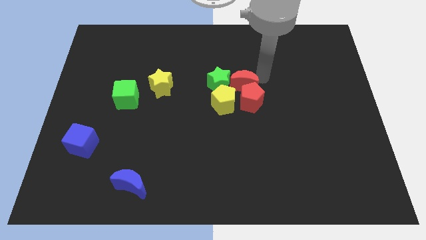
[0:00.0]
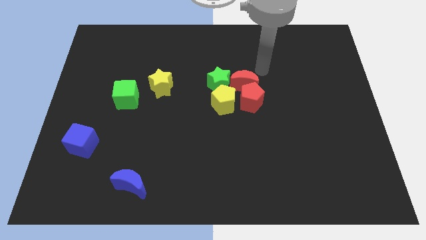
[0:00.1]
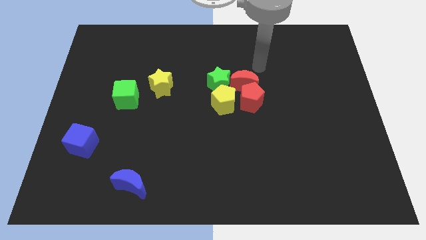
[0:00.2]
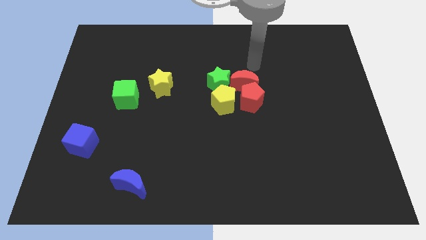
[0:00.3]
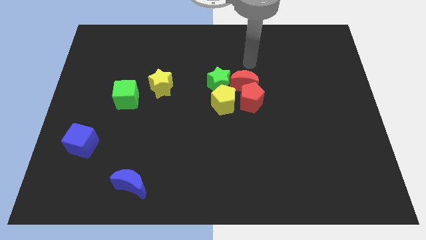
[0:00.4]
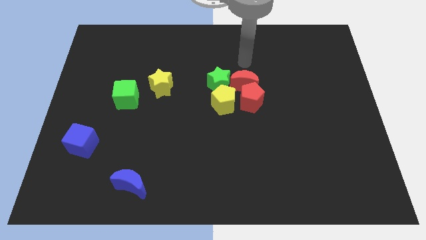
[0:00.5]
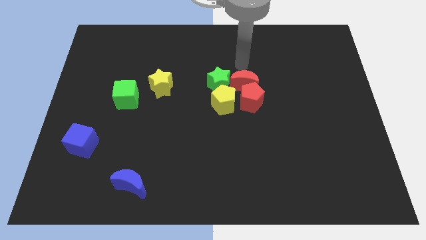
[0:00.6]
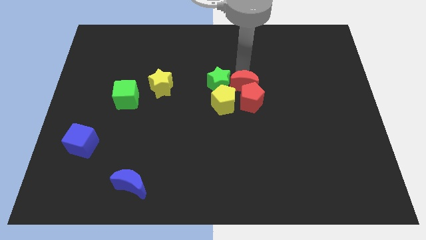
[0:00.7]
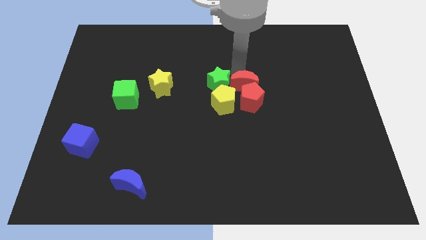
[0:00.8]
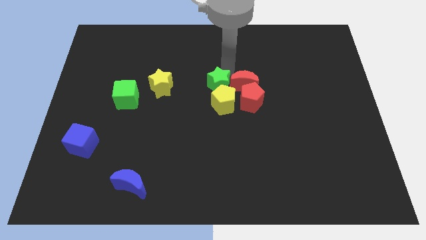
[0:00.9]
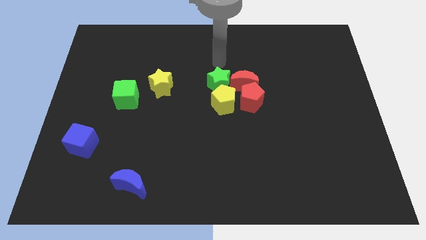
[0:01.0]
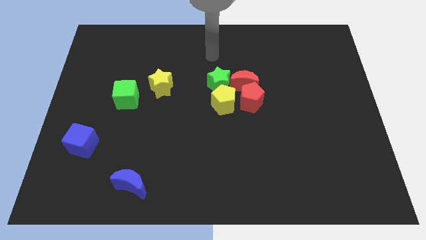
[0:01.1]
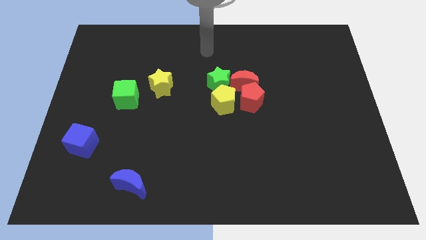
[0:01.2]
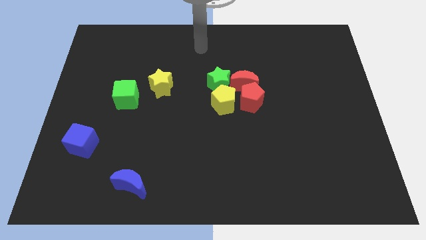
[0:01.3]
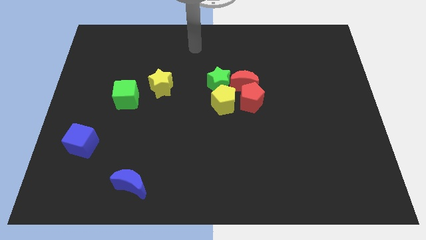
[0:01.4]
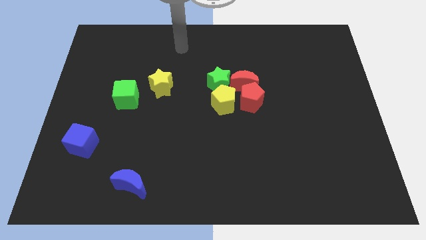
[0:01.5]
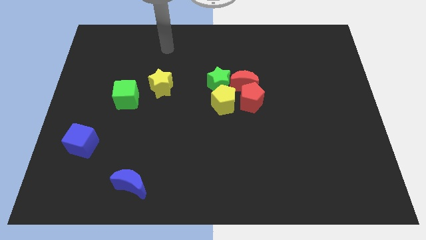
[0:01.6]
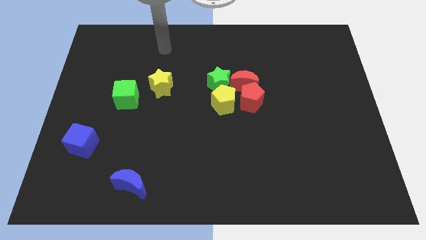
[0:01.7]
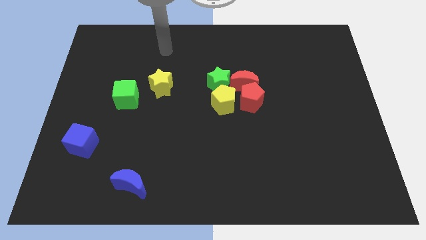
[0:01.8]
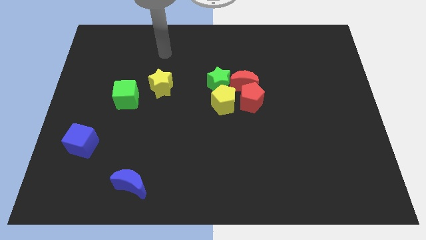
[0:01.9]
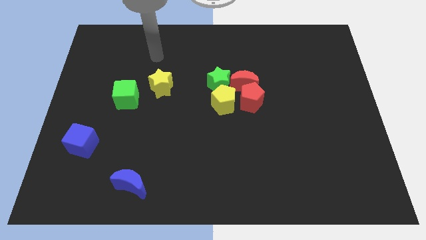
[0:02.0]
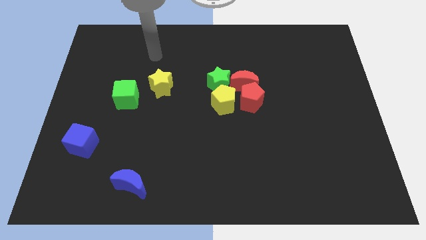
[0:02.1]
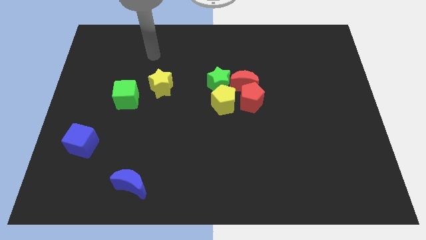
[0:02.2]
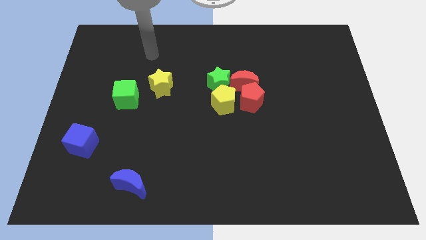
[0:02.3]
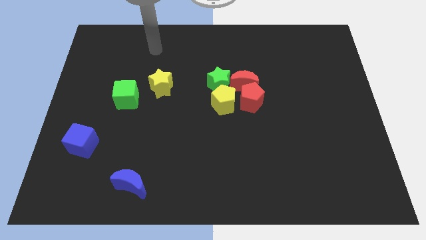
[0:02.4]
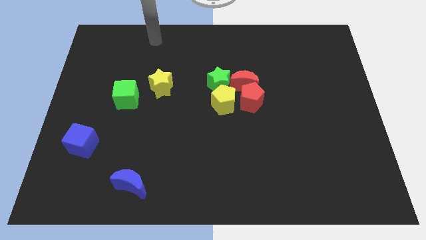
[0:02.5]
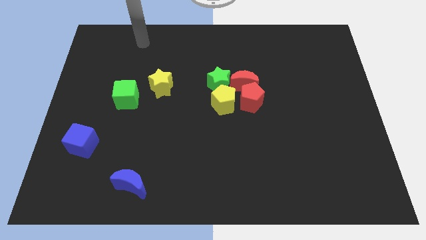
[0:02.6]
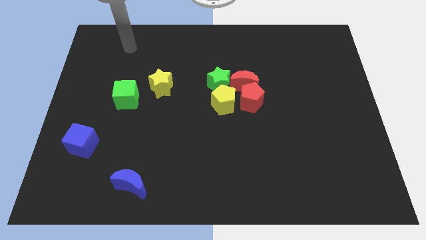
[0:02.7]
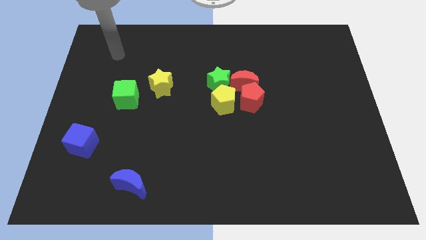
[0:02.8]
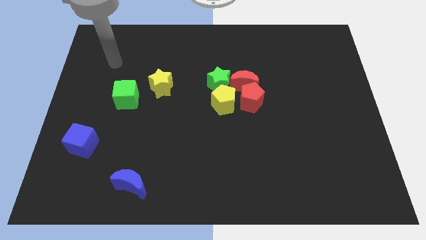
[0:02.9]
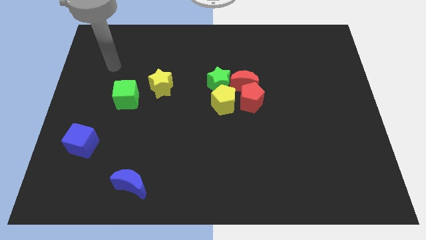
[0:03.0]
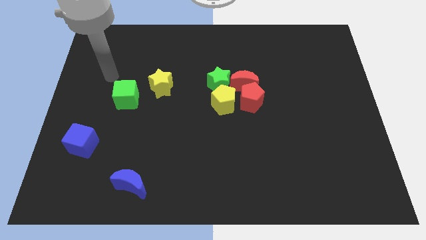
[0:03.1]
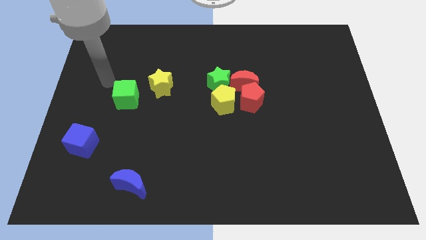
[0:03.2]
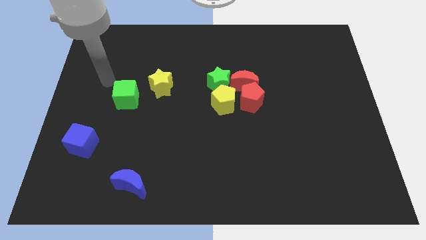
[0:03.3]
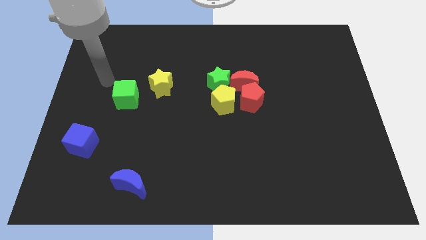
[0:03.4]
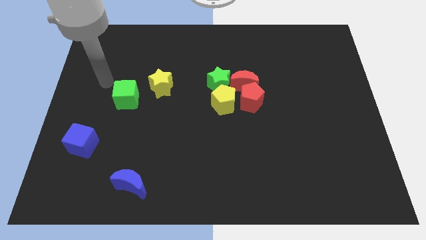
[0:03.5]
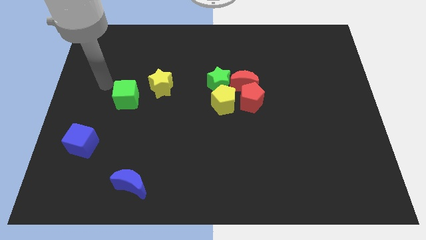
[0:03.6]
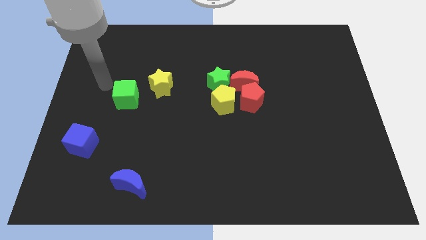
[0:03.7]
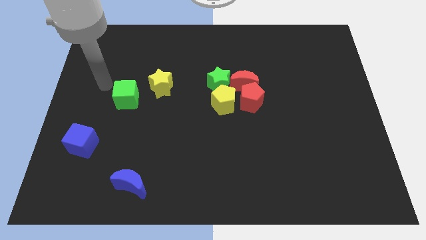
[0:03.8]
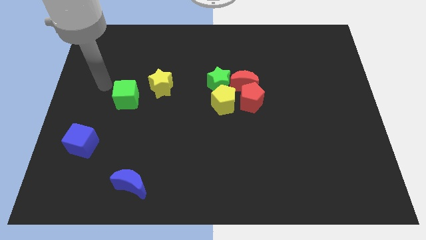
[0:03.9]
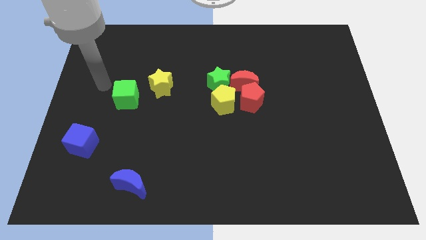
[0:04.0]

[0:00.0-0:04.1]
move your arm away from red moon

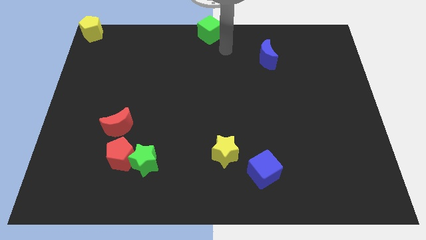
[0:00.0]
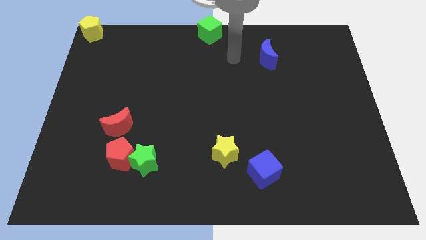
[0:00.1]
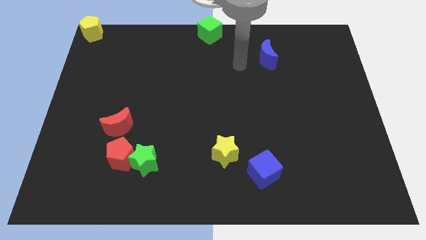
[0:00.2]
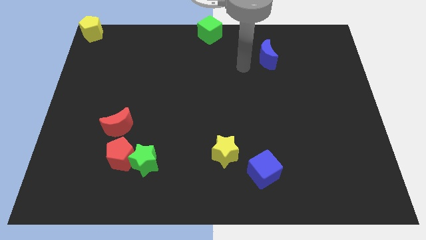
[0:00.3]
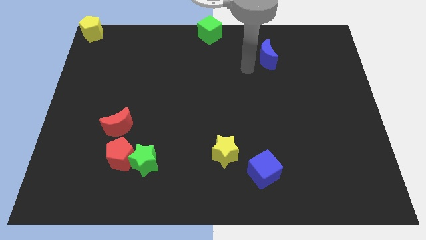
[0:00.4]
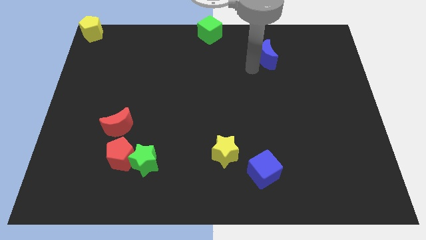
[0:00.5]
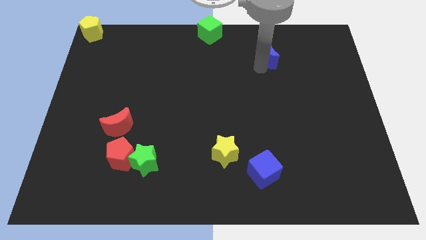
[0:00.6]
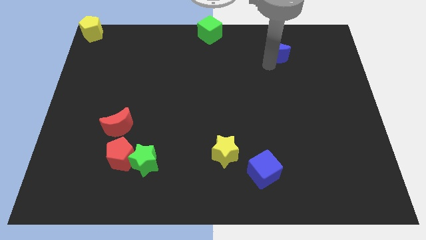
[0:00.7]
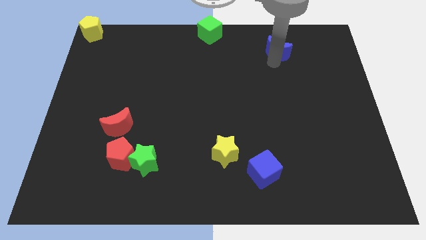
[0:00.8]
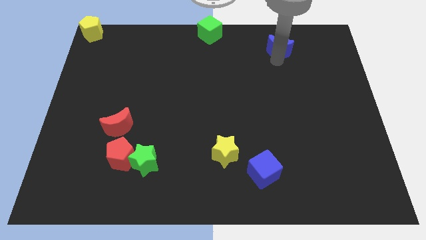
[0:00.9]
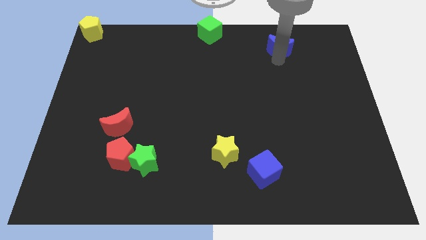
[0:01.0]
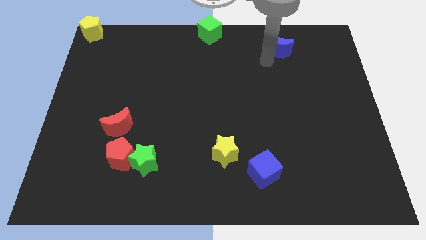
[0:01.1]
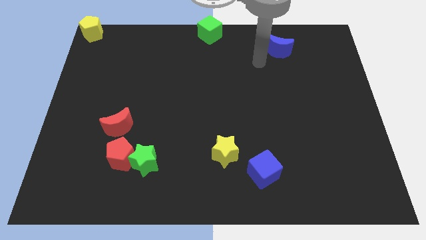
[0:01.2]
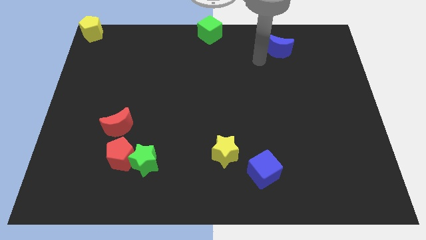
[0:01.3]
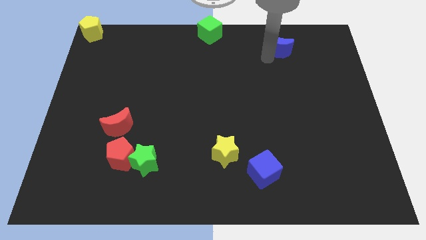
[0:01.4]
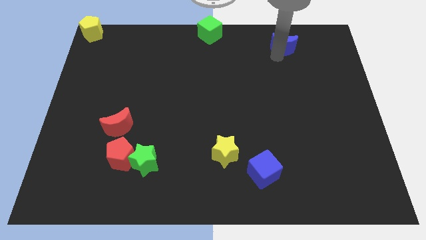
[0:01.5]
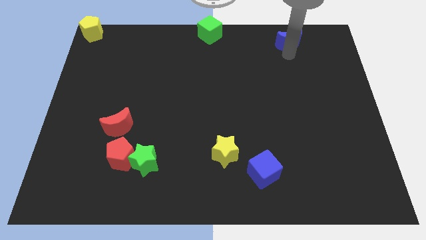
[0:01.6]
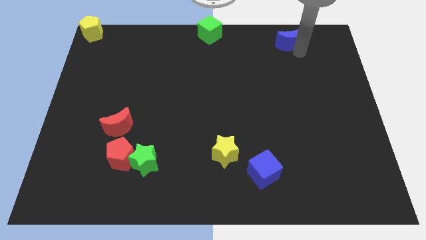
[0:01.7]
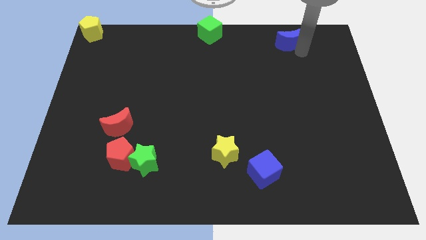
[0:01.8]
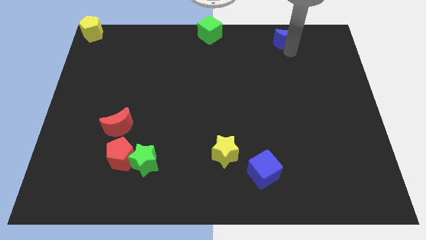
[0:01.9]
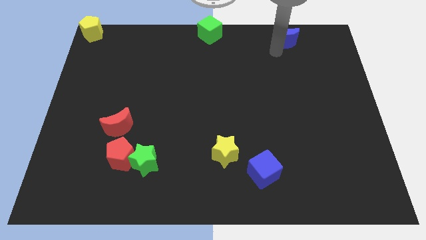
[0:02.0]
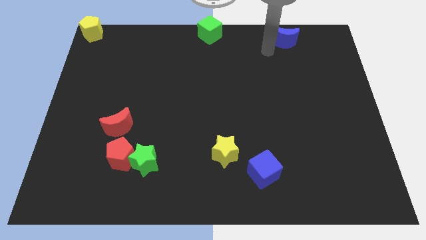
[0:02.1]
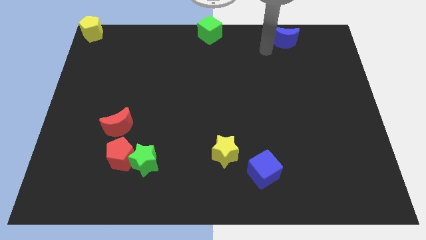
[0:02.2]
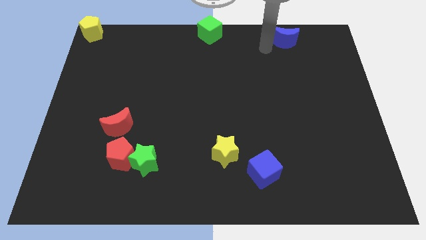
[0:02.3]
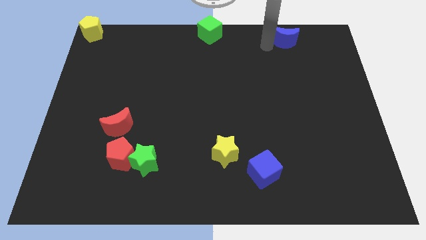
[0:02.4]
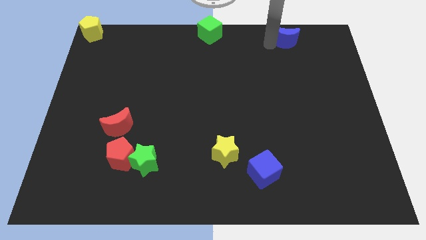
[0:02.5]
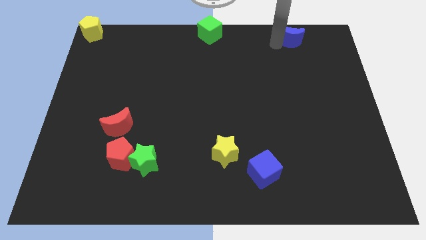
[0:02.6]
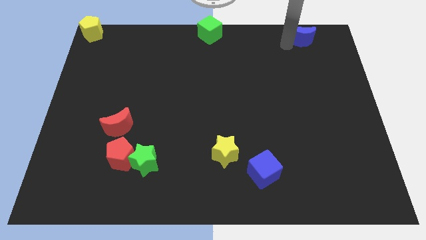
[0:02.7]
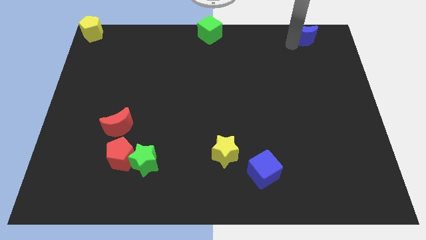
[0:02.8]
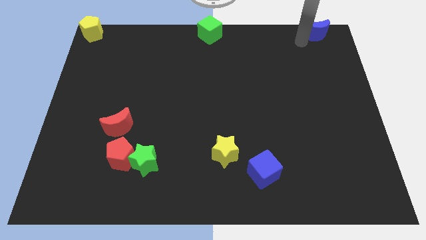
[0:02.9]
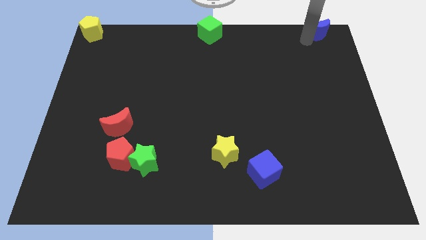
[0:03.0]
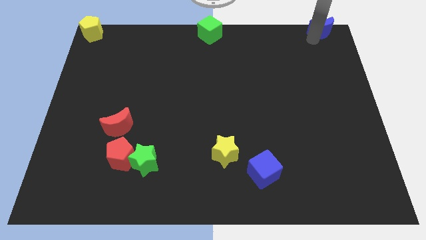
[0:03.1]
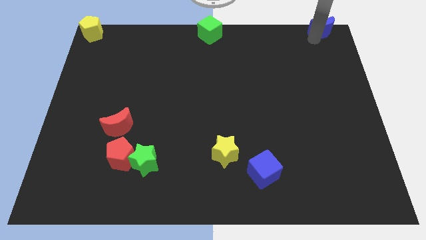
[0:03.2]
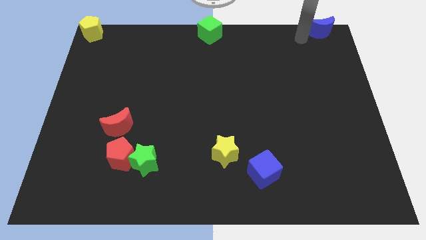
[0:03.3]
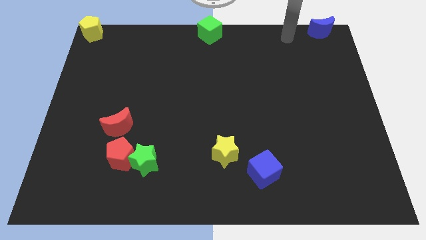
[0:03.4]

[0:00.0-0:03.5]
place the blue moon at the top right corner

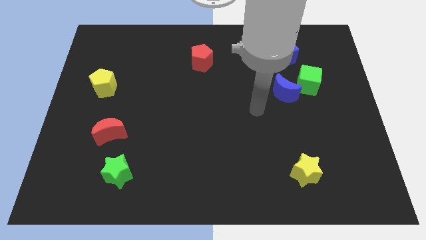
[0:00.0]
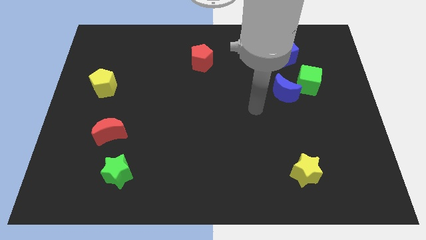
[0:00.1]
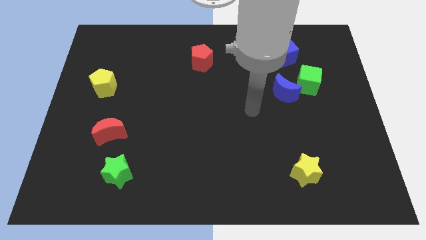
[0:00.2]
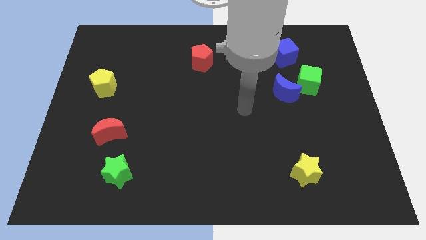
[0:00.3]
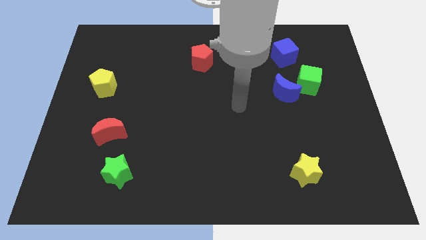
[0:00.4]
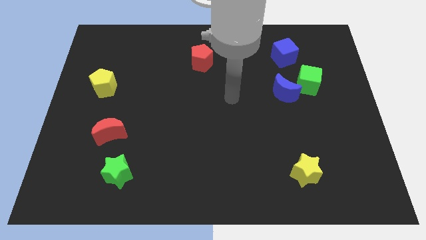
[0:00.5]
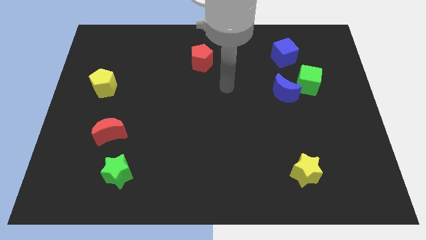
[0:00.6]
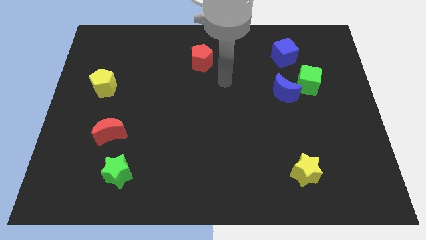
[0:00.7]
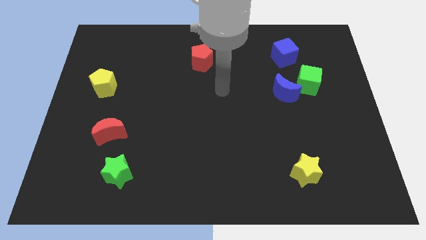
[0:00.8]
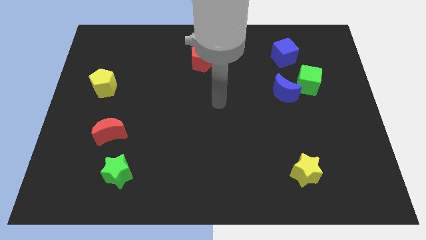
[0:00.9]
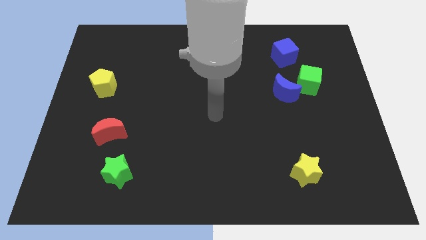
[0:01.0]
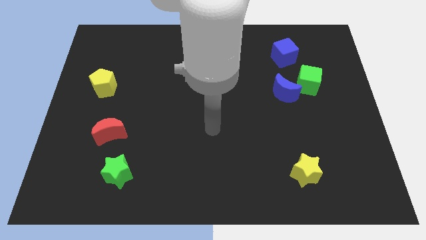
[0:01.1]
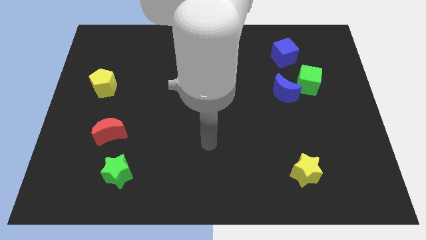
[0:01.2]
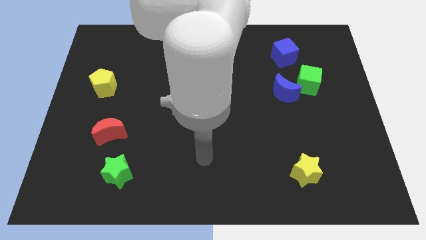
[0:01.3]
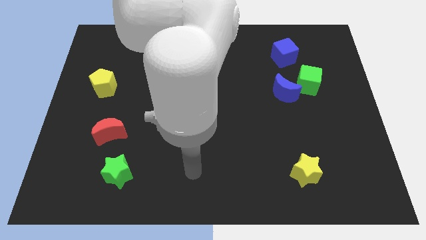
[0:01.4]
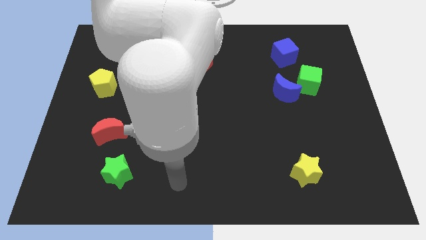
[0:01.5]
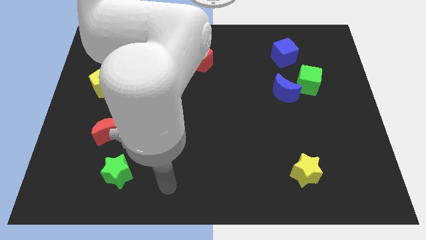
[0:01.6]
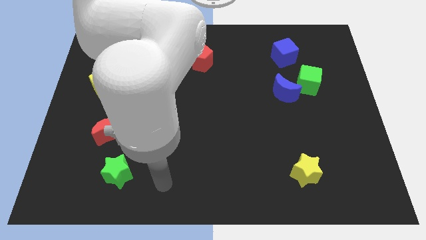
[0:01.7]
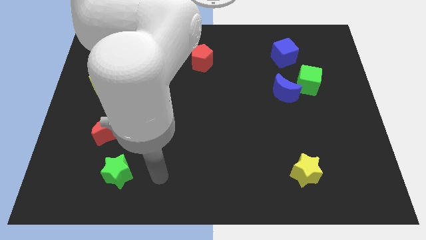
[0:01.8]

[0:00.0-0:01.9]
point the arm to the right of the green star
